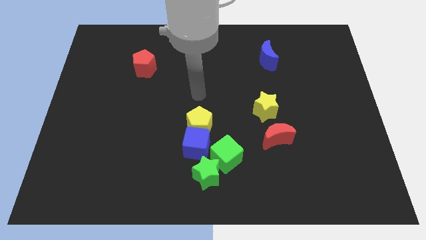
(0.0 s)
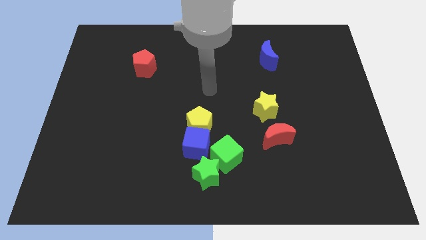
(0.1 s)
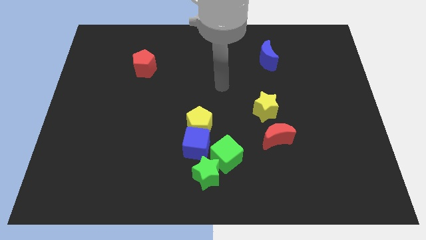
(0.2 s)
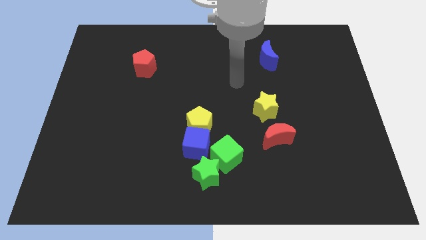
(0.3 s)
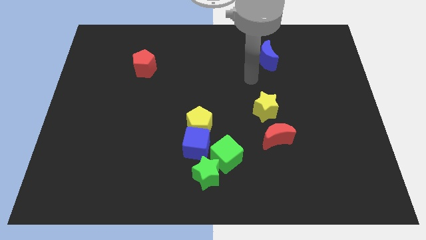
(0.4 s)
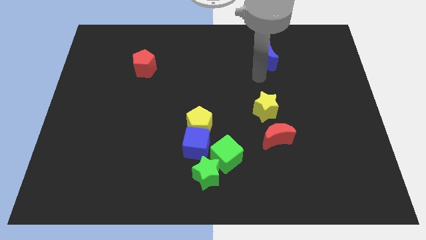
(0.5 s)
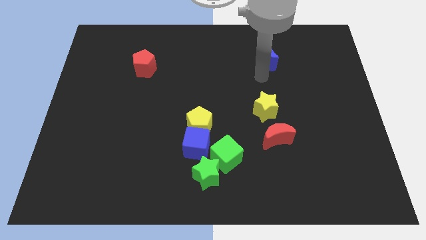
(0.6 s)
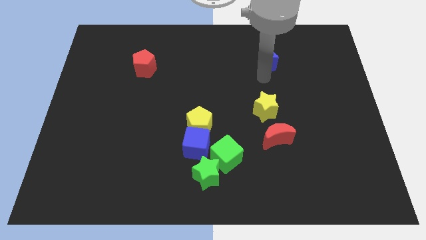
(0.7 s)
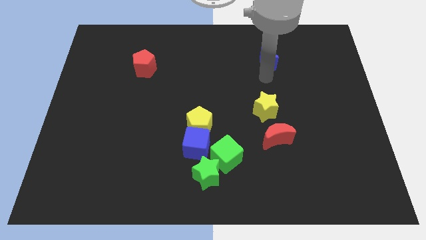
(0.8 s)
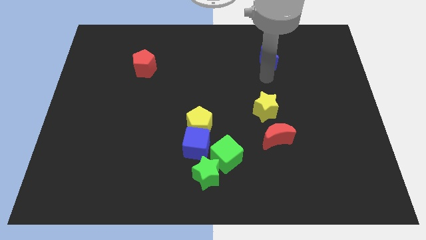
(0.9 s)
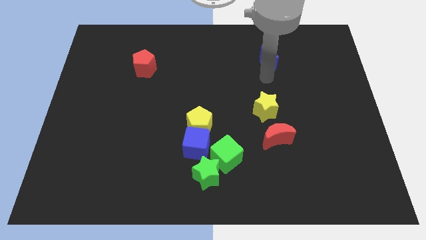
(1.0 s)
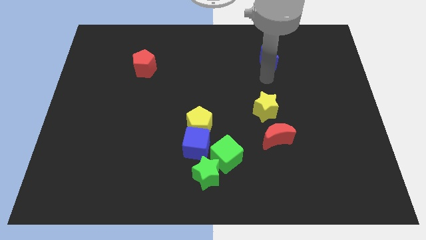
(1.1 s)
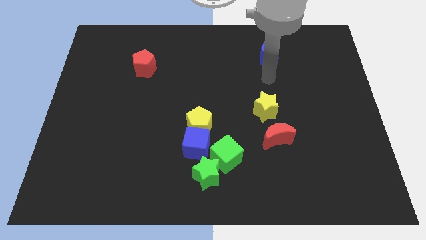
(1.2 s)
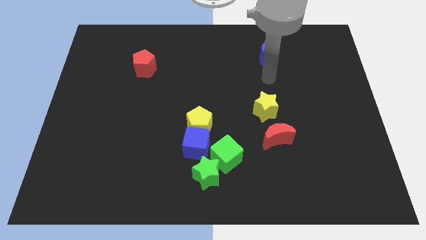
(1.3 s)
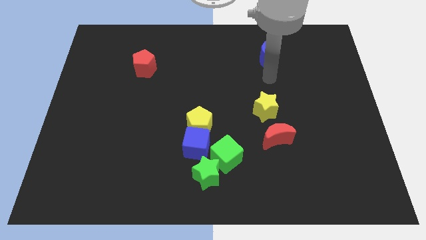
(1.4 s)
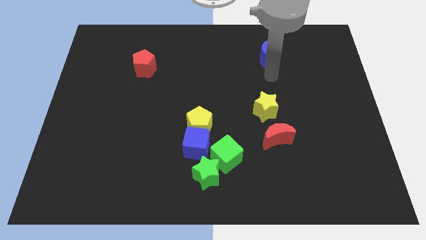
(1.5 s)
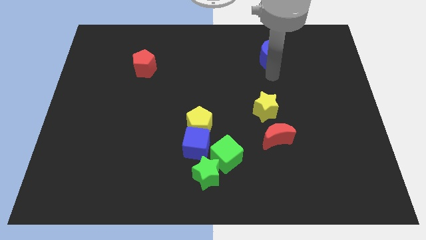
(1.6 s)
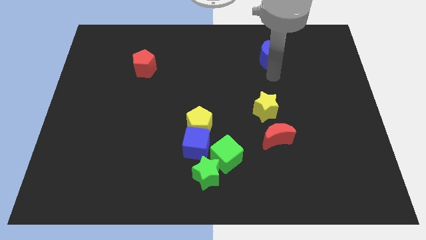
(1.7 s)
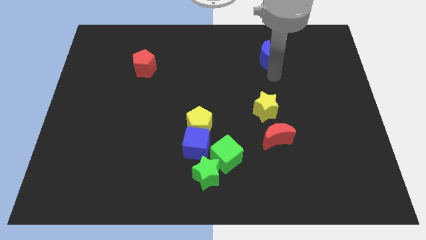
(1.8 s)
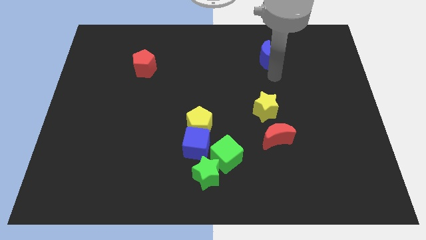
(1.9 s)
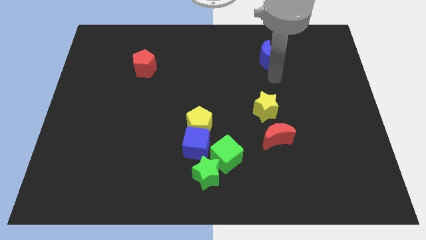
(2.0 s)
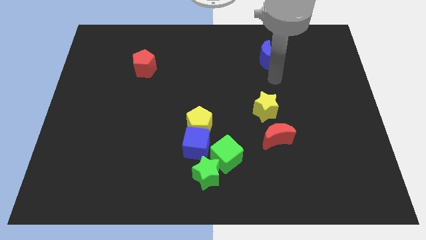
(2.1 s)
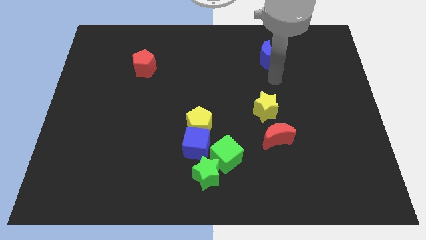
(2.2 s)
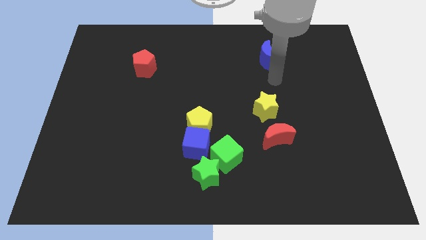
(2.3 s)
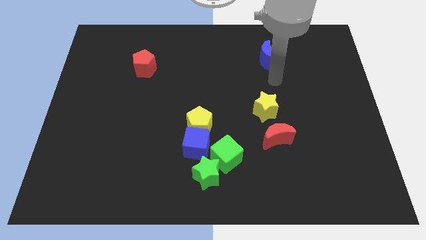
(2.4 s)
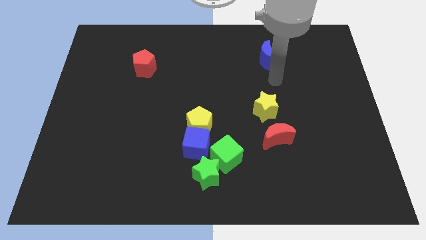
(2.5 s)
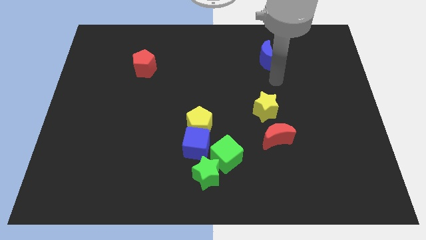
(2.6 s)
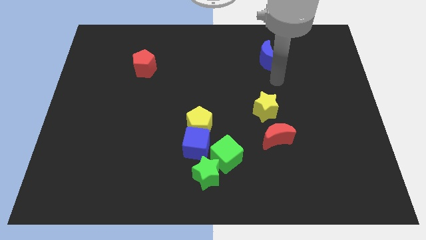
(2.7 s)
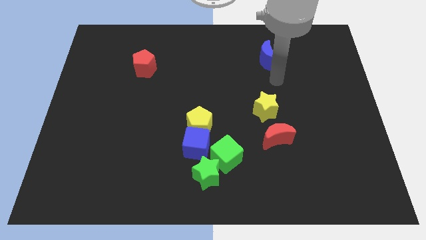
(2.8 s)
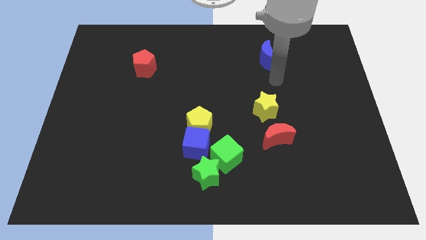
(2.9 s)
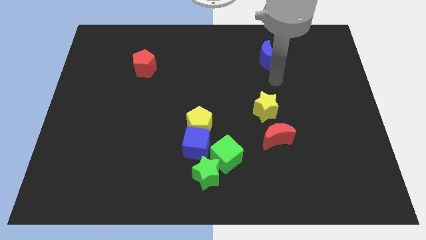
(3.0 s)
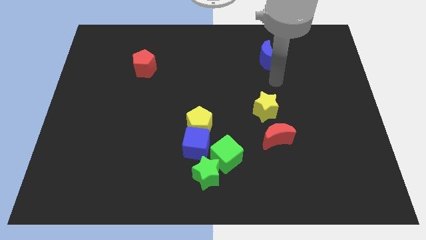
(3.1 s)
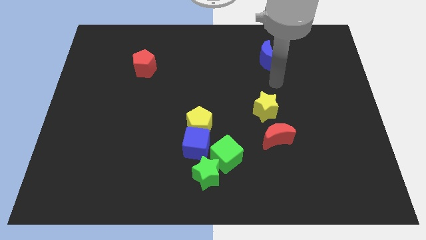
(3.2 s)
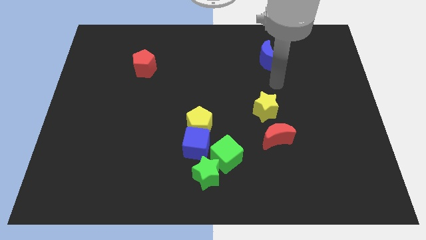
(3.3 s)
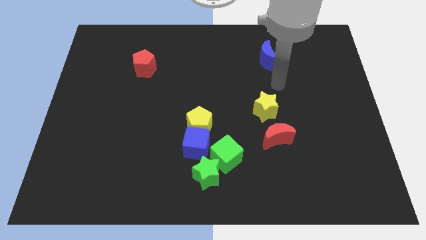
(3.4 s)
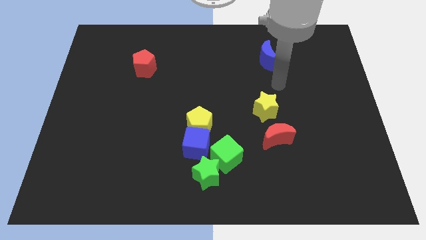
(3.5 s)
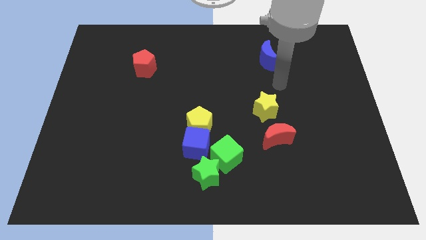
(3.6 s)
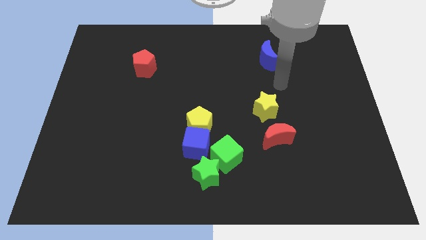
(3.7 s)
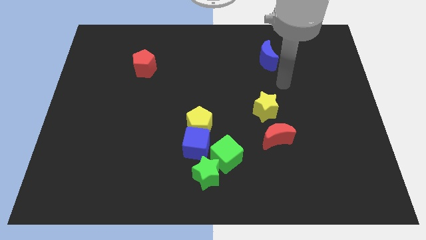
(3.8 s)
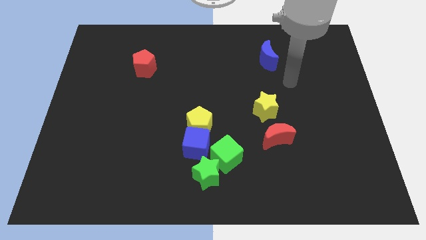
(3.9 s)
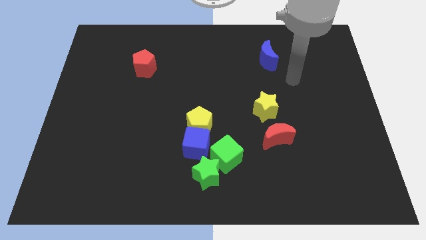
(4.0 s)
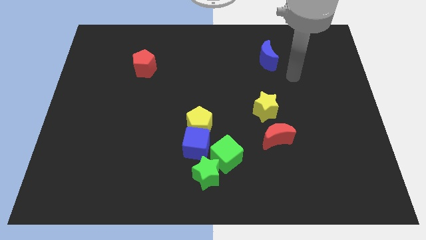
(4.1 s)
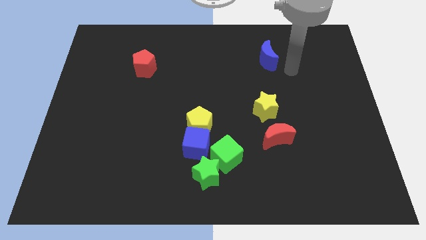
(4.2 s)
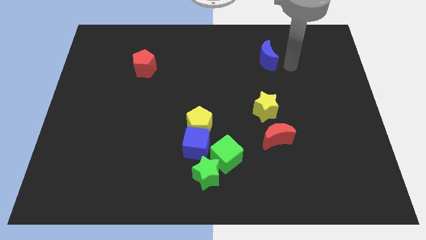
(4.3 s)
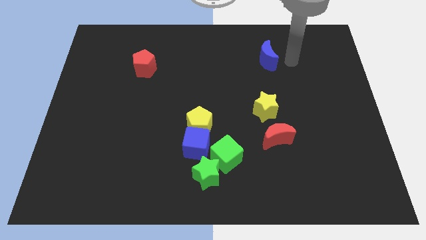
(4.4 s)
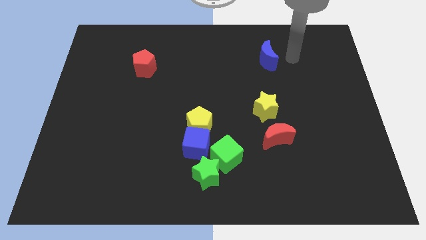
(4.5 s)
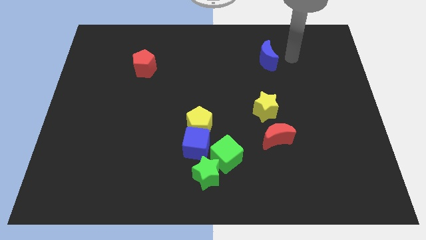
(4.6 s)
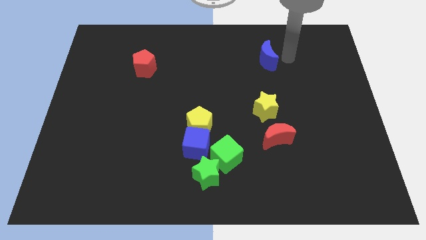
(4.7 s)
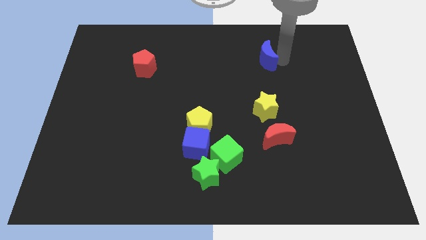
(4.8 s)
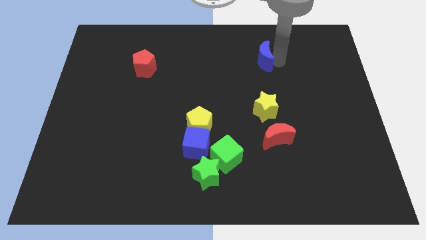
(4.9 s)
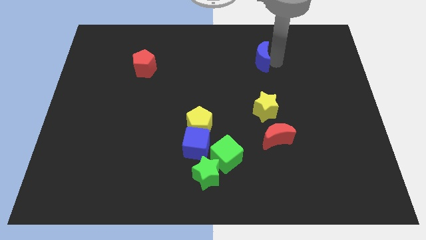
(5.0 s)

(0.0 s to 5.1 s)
touch the right side of the blue crescent

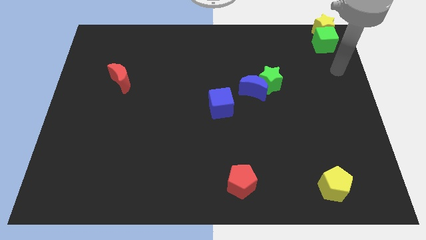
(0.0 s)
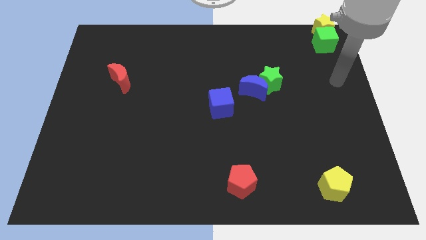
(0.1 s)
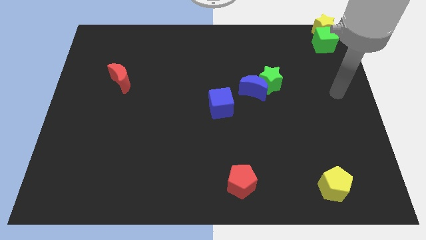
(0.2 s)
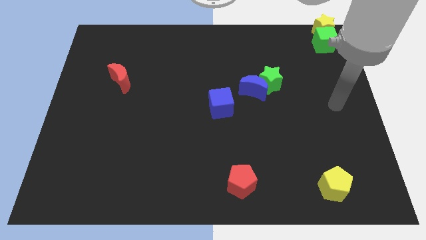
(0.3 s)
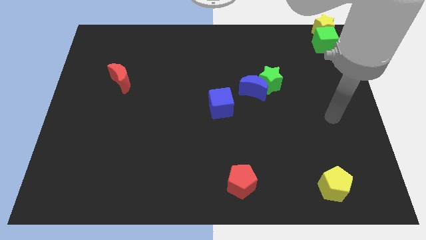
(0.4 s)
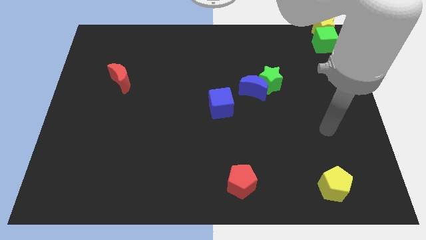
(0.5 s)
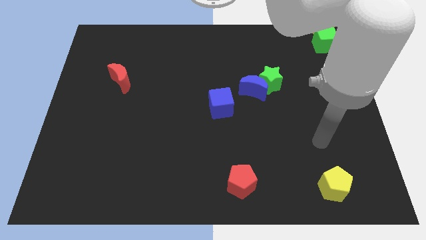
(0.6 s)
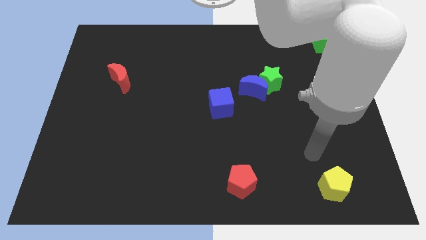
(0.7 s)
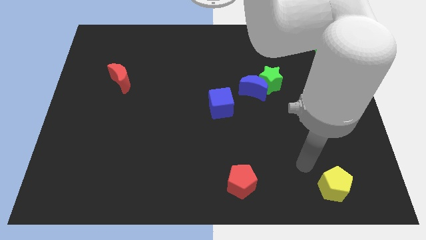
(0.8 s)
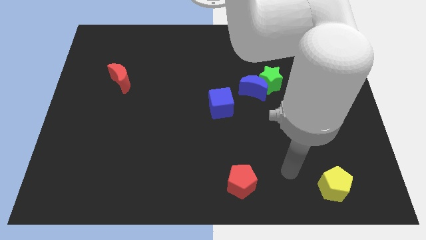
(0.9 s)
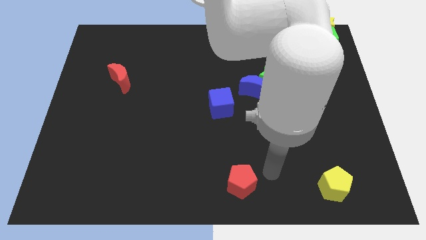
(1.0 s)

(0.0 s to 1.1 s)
place your arm to the right of red pentagon

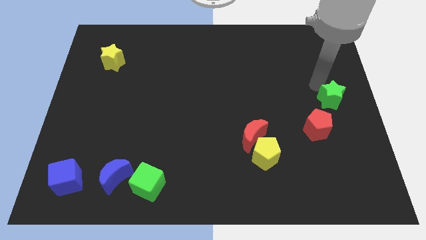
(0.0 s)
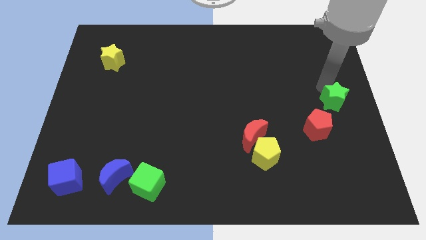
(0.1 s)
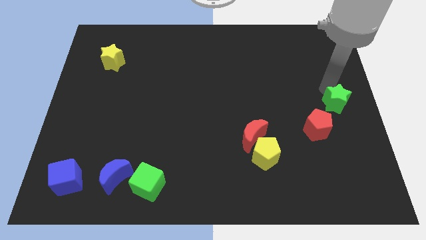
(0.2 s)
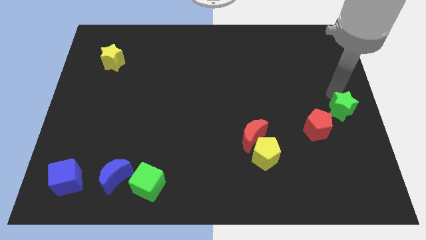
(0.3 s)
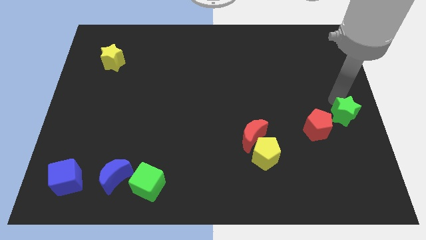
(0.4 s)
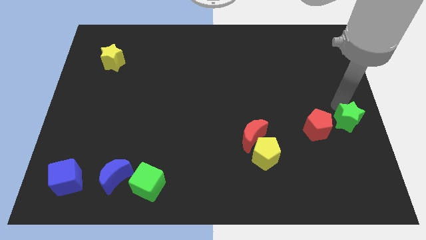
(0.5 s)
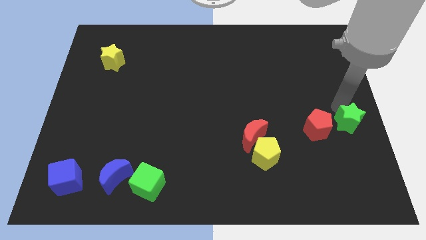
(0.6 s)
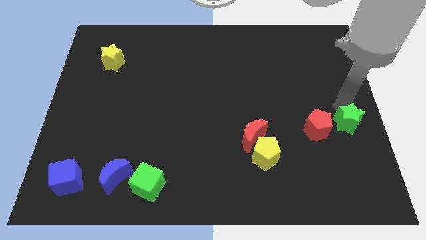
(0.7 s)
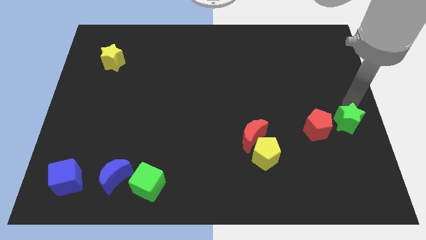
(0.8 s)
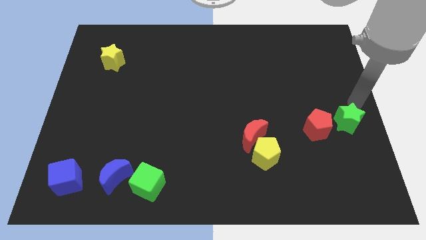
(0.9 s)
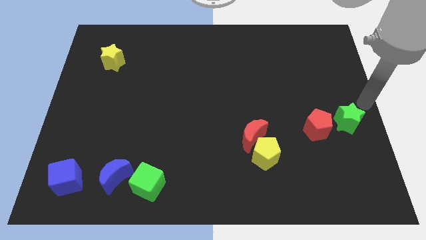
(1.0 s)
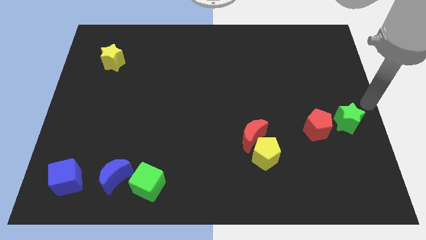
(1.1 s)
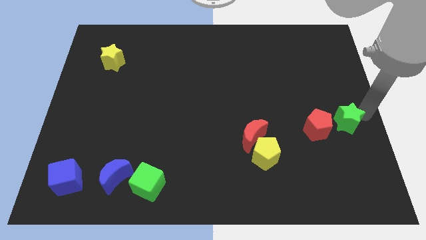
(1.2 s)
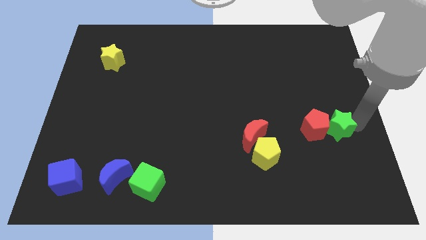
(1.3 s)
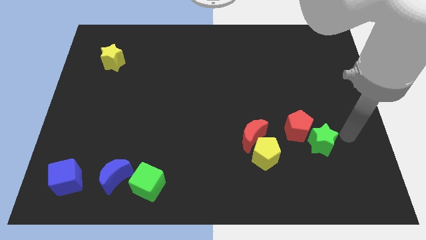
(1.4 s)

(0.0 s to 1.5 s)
place green star close to red pentagon

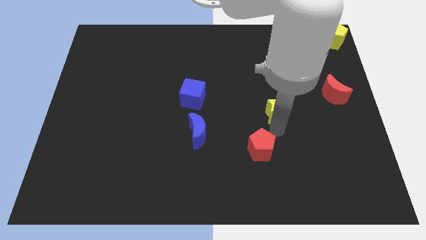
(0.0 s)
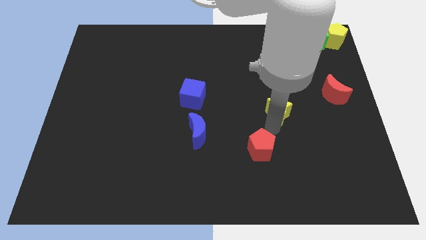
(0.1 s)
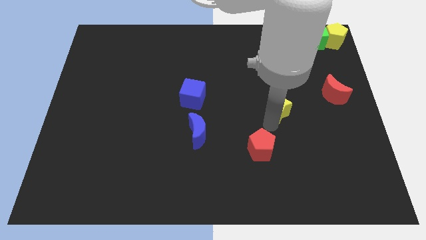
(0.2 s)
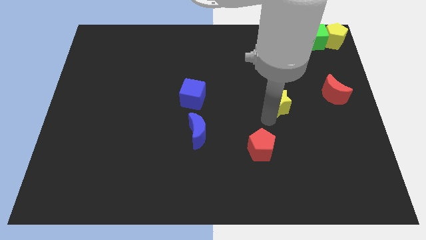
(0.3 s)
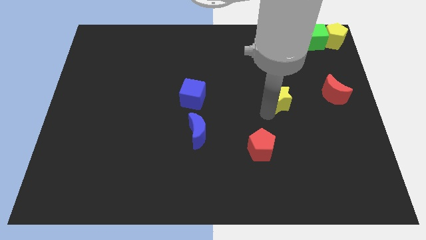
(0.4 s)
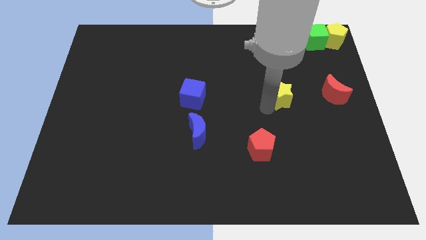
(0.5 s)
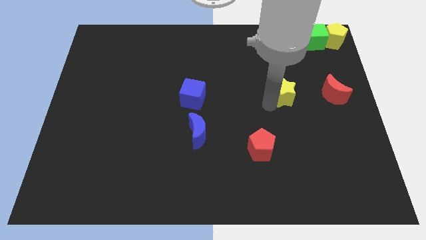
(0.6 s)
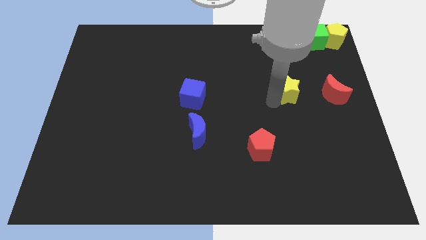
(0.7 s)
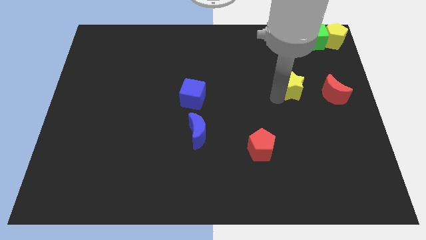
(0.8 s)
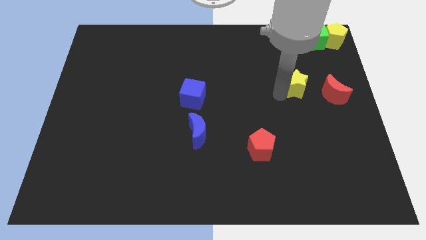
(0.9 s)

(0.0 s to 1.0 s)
push the yellow star to the left of the red crescent

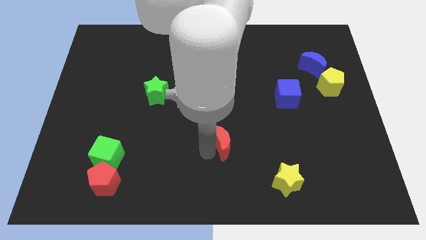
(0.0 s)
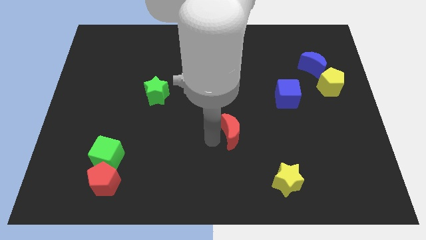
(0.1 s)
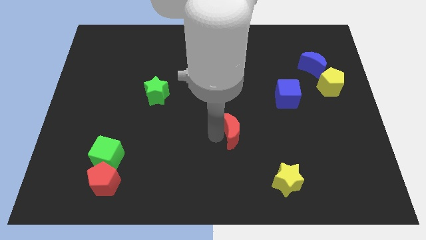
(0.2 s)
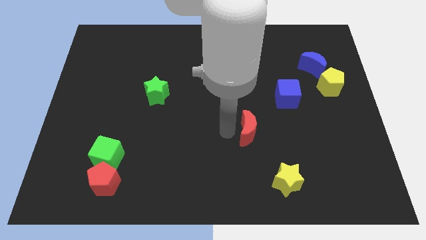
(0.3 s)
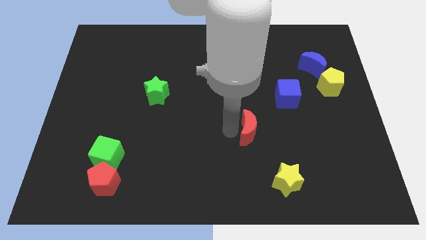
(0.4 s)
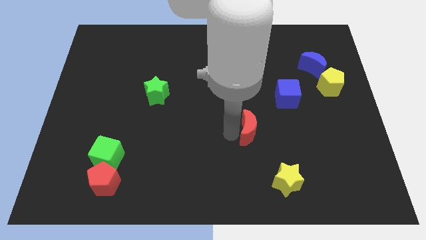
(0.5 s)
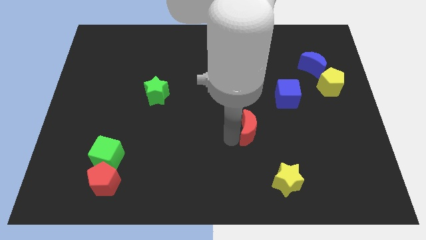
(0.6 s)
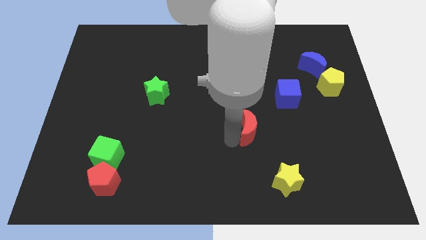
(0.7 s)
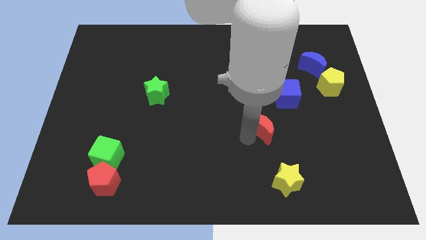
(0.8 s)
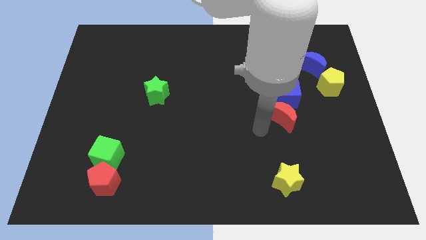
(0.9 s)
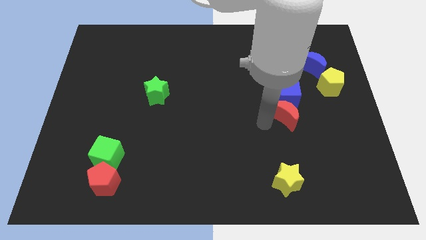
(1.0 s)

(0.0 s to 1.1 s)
slide red moon towards blue cube
